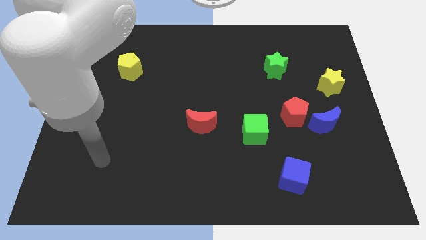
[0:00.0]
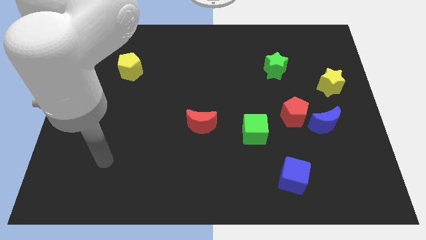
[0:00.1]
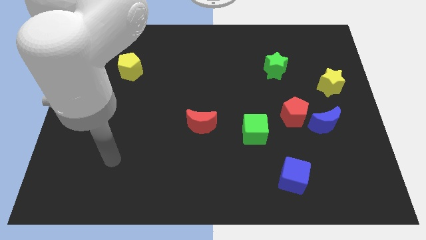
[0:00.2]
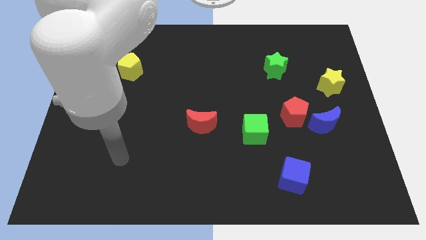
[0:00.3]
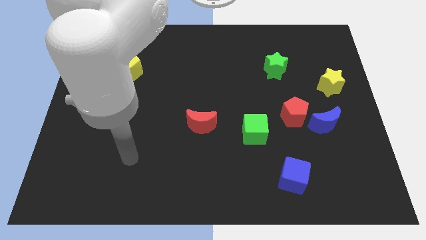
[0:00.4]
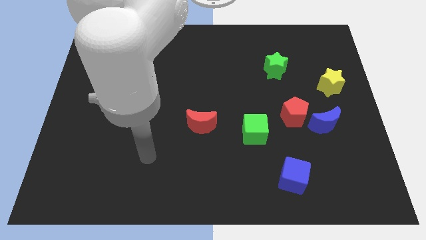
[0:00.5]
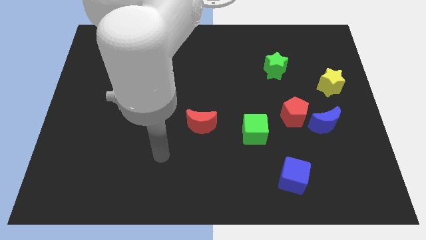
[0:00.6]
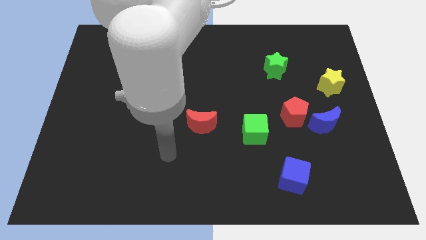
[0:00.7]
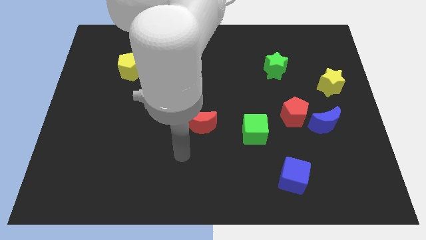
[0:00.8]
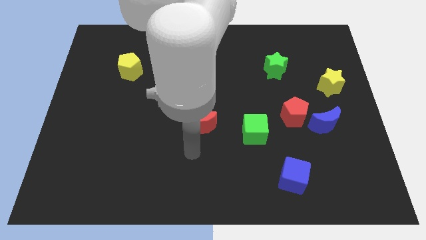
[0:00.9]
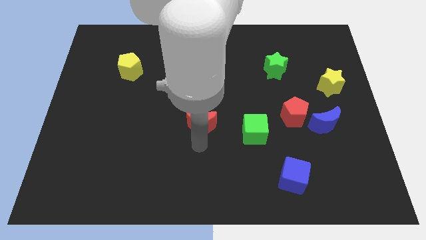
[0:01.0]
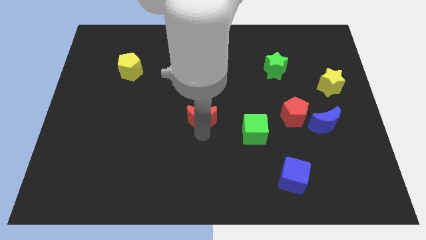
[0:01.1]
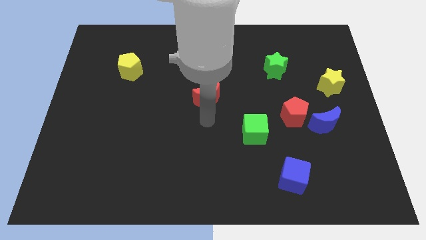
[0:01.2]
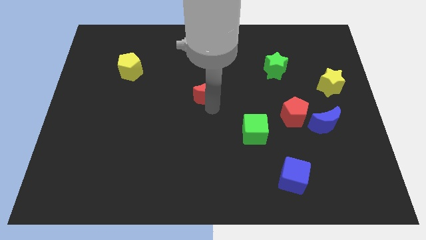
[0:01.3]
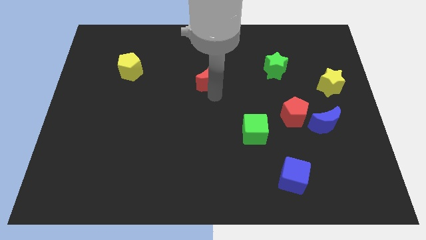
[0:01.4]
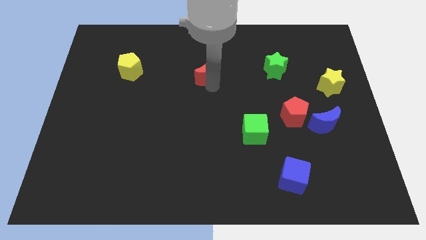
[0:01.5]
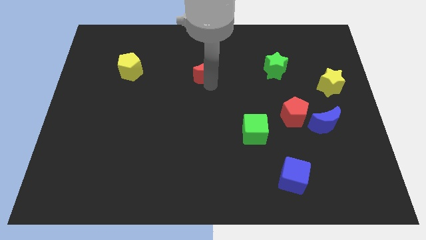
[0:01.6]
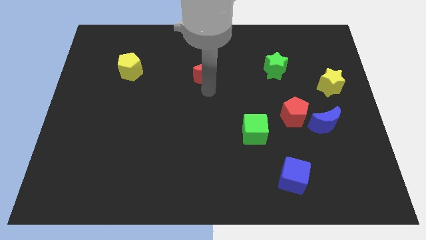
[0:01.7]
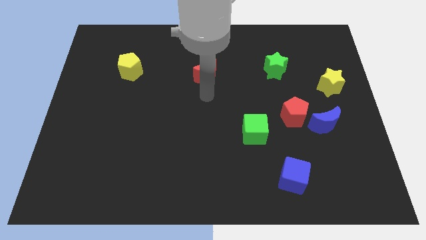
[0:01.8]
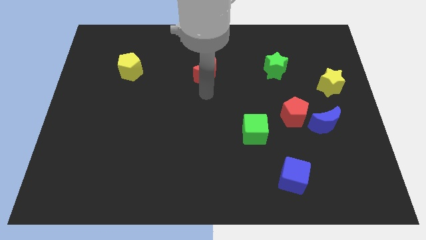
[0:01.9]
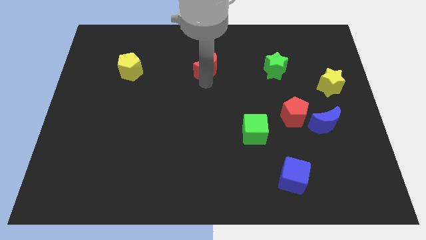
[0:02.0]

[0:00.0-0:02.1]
put the red moon parallel left to the green star

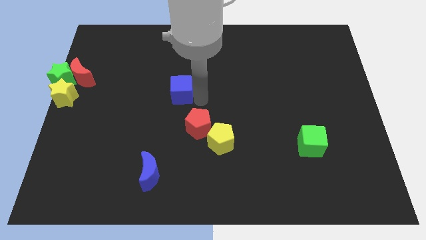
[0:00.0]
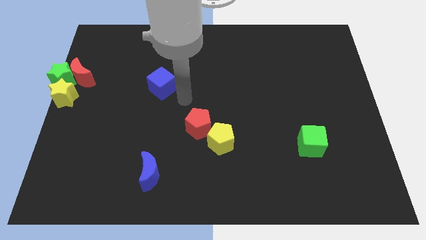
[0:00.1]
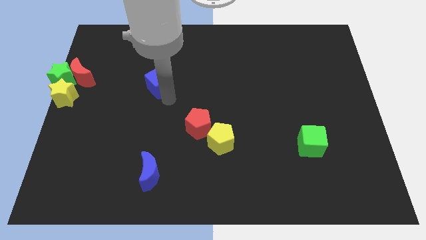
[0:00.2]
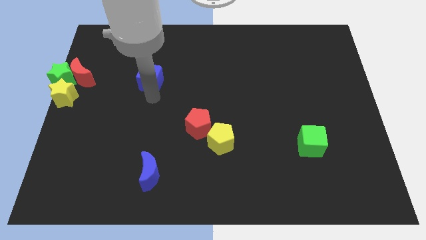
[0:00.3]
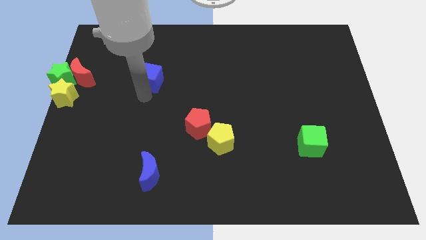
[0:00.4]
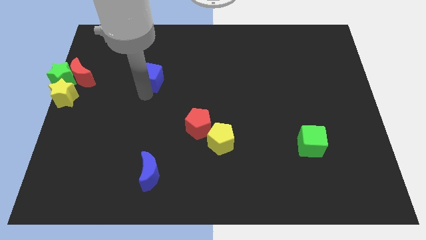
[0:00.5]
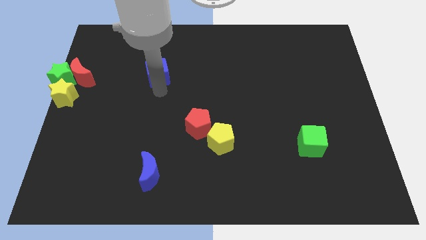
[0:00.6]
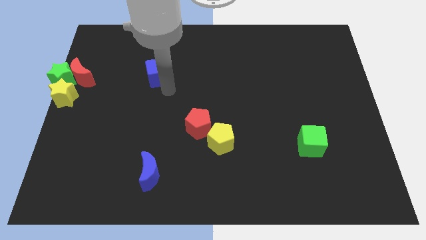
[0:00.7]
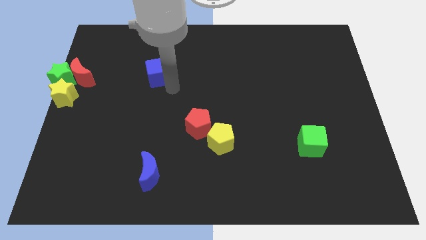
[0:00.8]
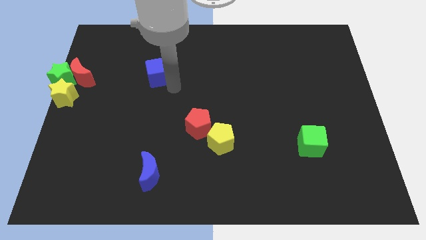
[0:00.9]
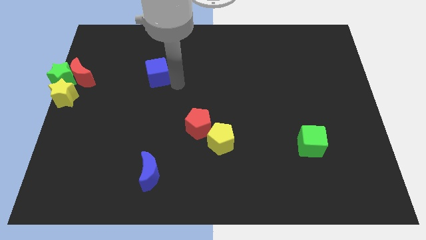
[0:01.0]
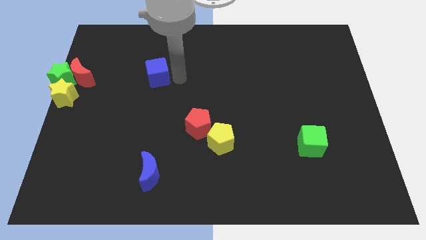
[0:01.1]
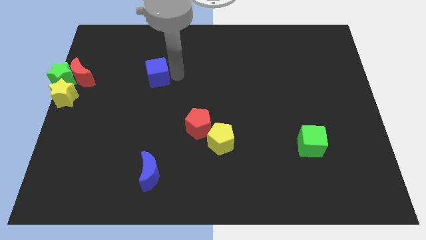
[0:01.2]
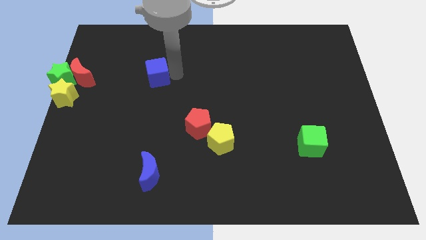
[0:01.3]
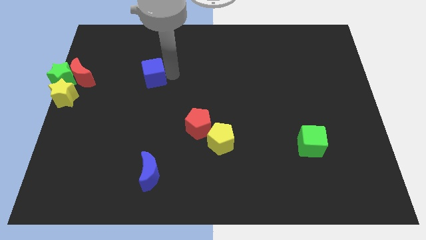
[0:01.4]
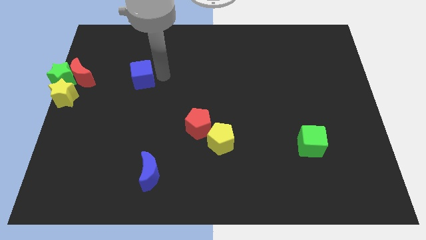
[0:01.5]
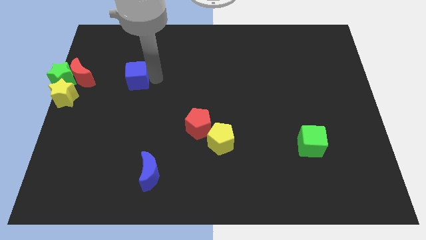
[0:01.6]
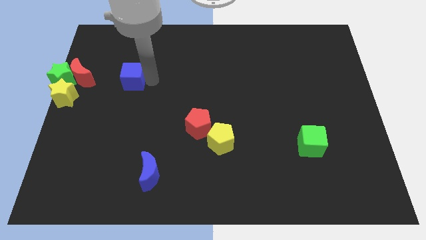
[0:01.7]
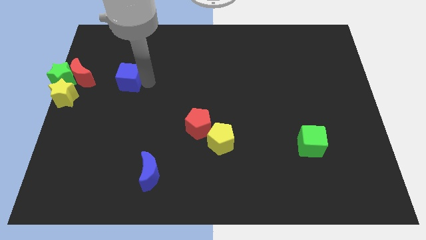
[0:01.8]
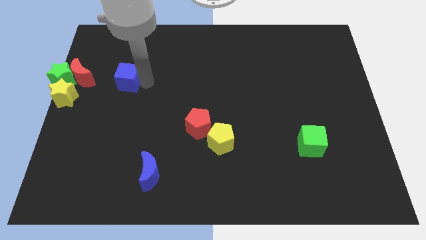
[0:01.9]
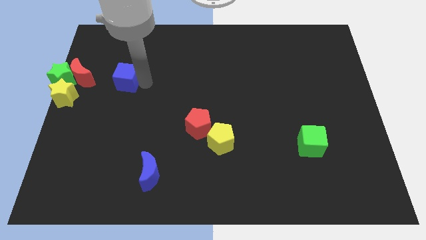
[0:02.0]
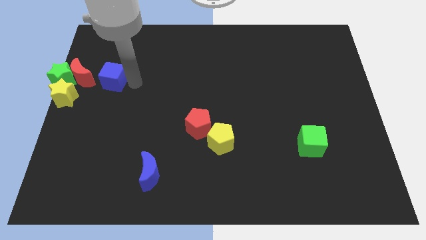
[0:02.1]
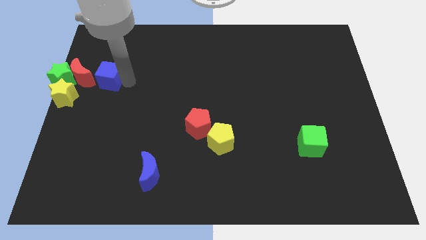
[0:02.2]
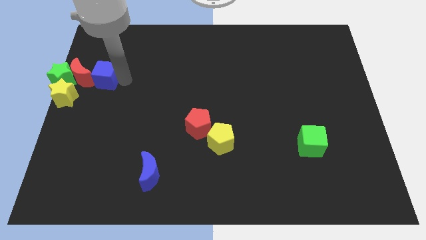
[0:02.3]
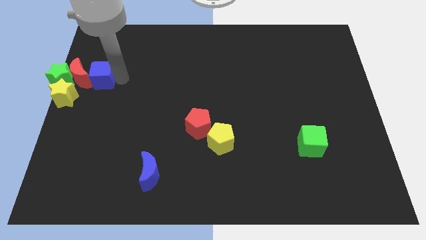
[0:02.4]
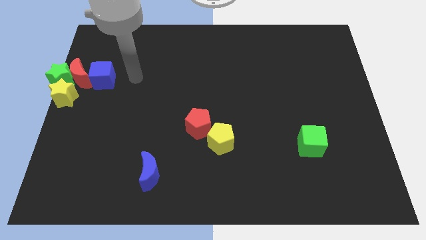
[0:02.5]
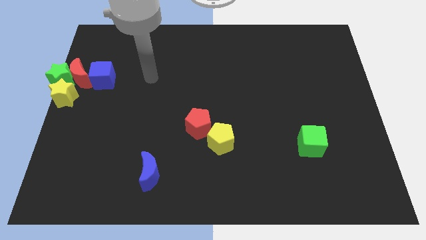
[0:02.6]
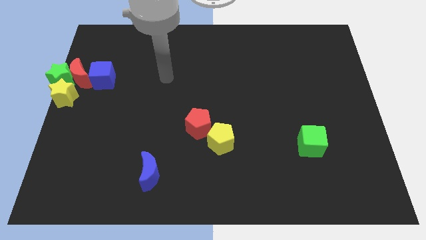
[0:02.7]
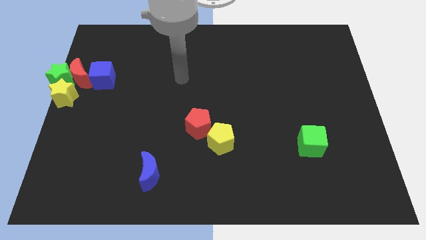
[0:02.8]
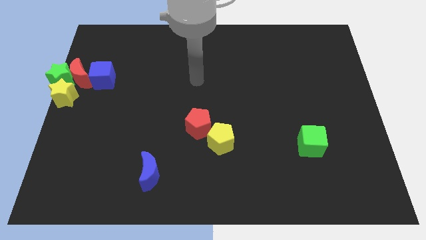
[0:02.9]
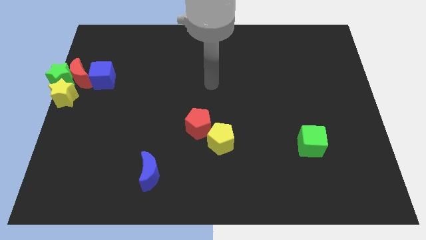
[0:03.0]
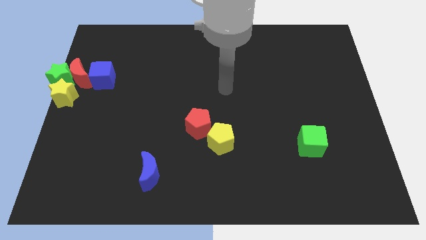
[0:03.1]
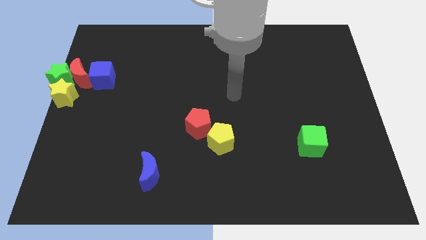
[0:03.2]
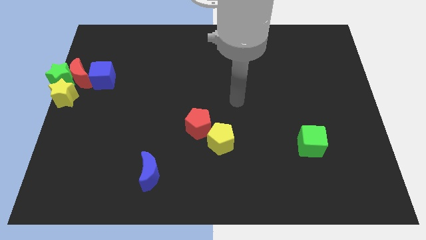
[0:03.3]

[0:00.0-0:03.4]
push the blue cube into the red crescent

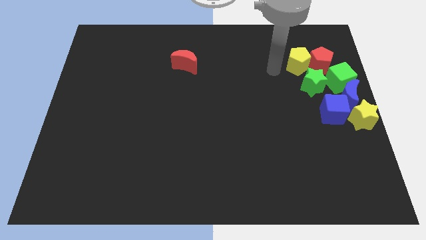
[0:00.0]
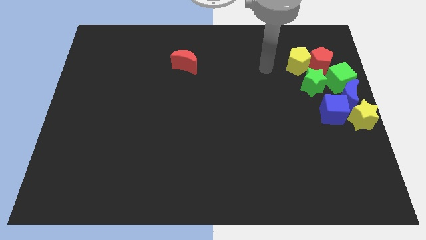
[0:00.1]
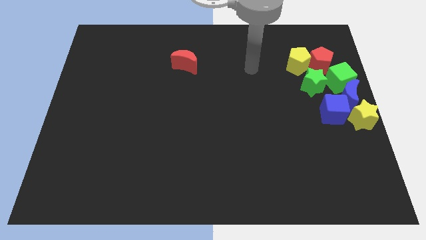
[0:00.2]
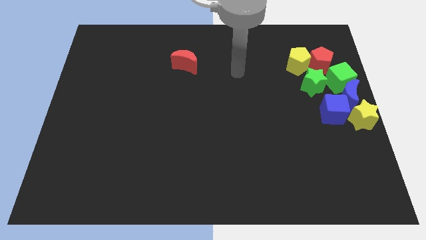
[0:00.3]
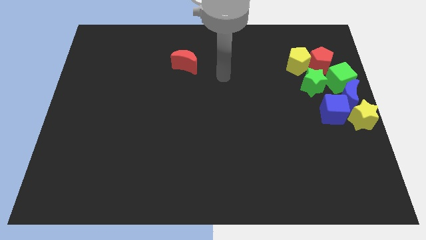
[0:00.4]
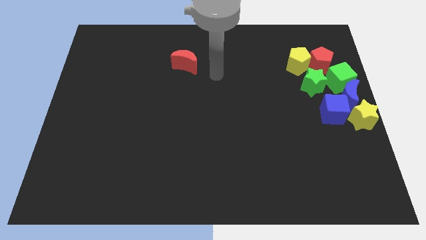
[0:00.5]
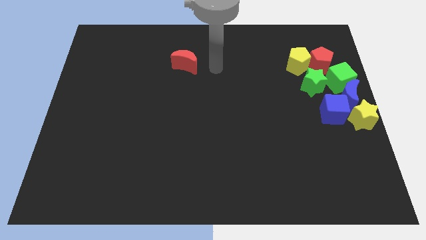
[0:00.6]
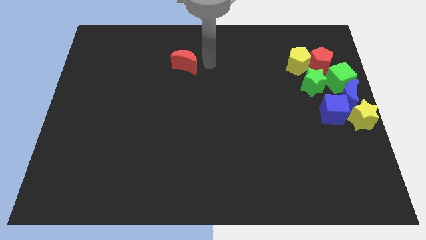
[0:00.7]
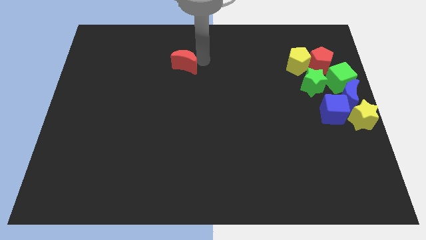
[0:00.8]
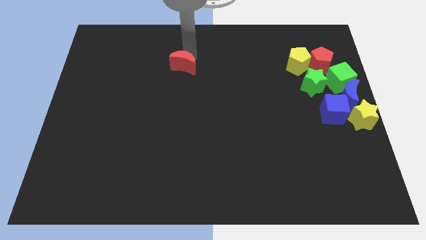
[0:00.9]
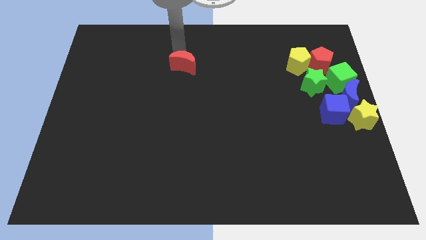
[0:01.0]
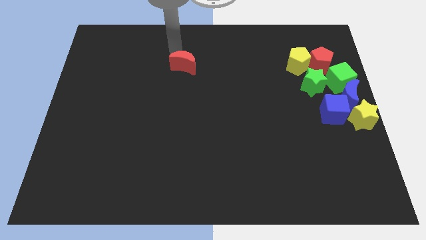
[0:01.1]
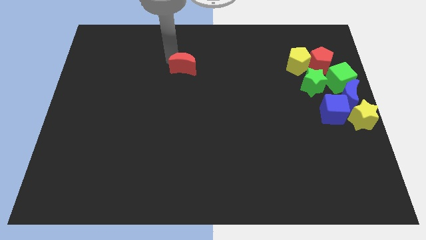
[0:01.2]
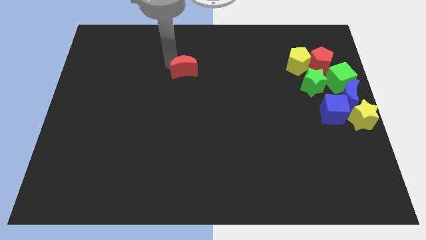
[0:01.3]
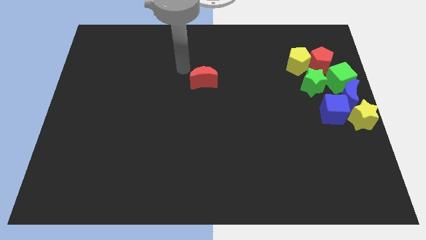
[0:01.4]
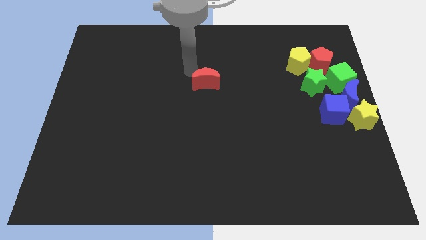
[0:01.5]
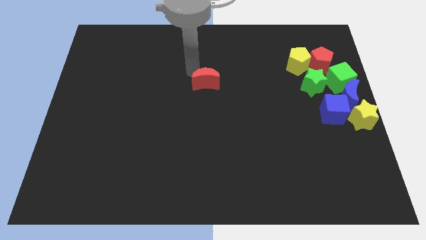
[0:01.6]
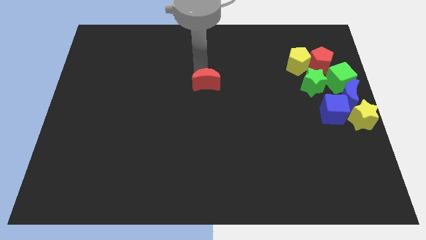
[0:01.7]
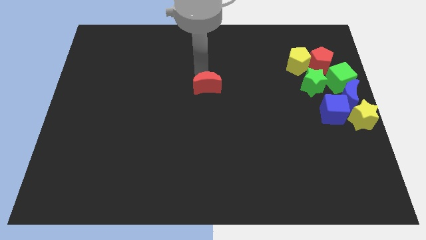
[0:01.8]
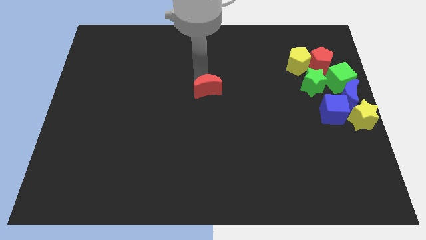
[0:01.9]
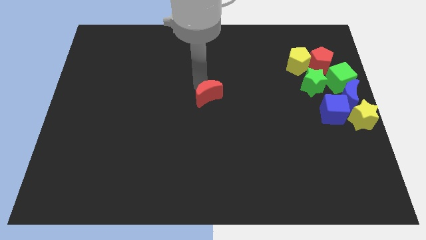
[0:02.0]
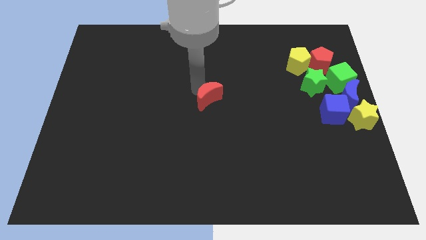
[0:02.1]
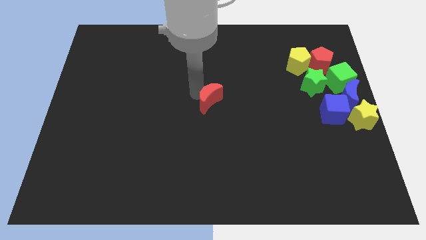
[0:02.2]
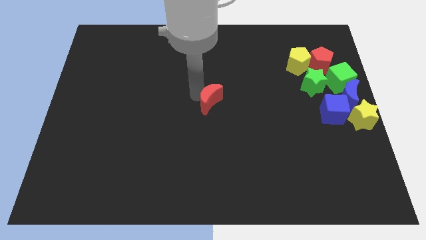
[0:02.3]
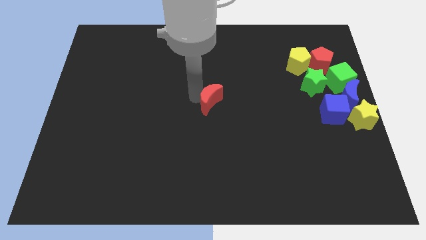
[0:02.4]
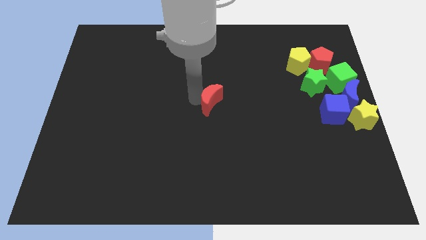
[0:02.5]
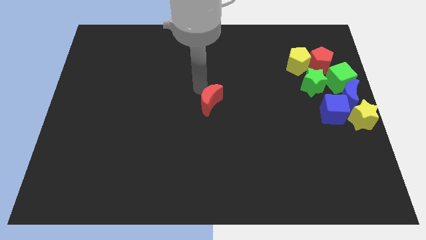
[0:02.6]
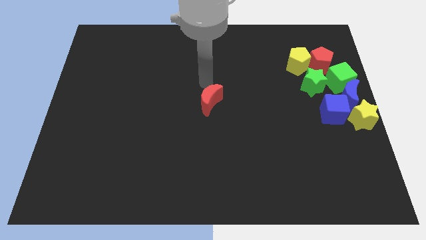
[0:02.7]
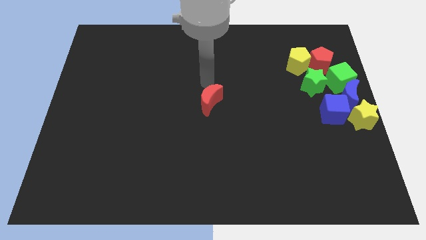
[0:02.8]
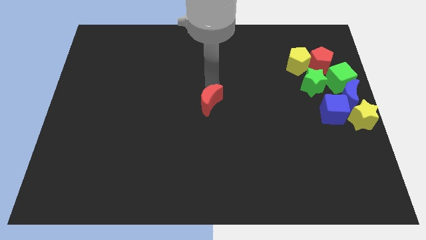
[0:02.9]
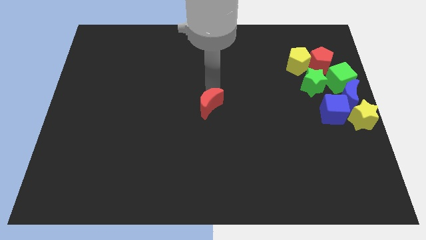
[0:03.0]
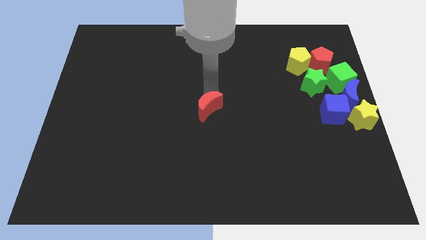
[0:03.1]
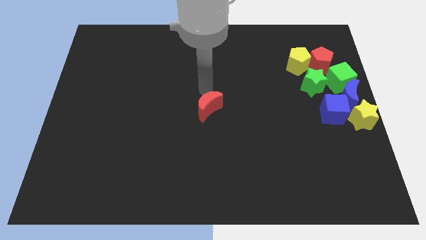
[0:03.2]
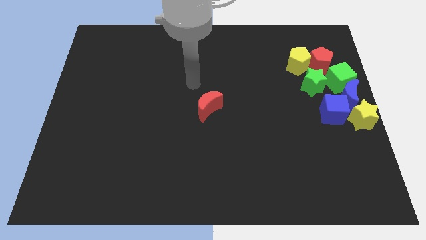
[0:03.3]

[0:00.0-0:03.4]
place the red moon at the center of the board
